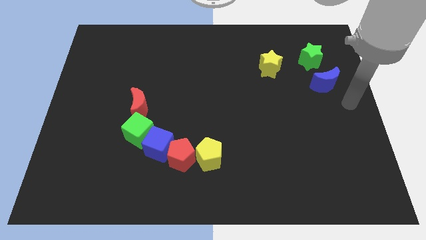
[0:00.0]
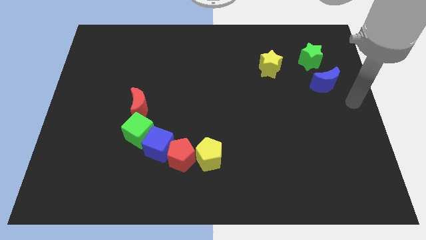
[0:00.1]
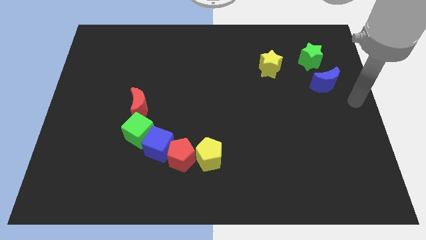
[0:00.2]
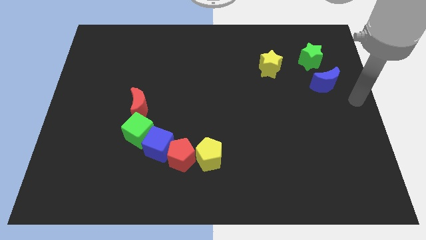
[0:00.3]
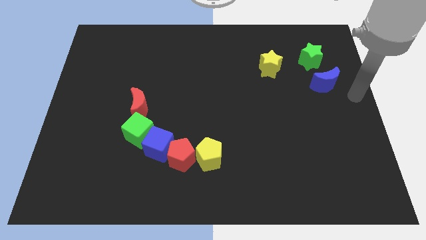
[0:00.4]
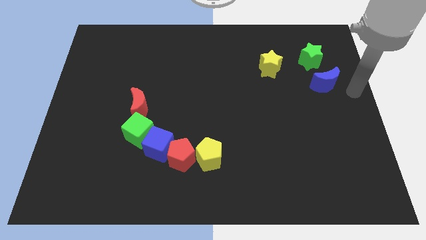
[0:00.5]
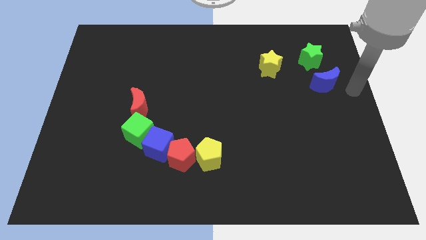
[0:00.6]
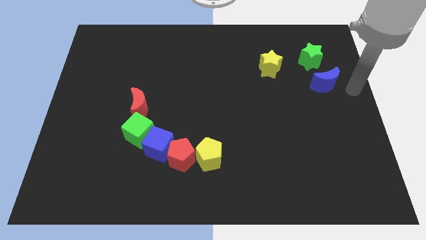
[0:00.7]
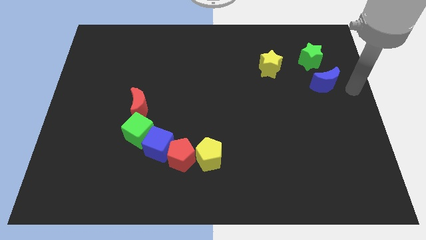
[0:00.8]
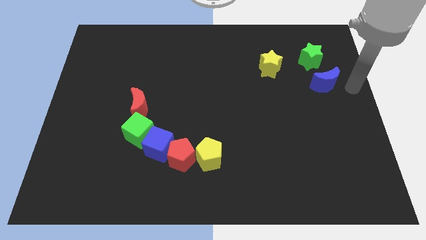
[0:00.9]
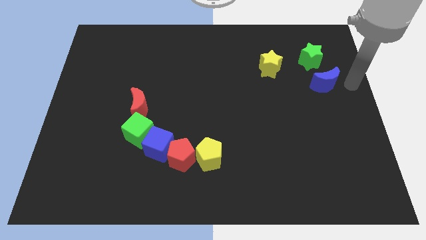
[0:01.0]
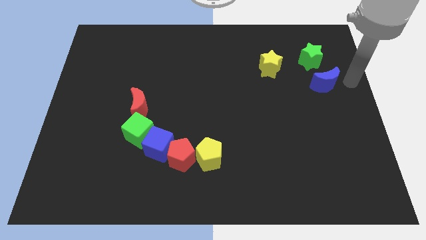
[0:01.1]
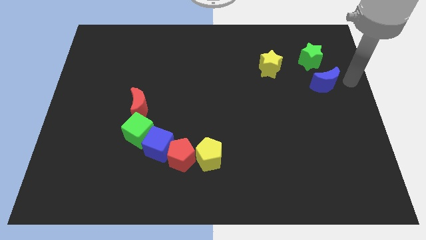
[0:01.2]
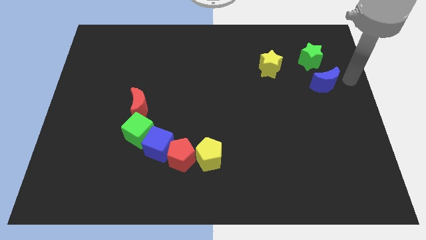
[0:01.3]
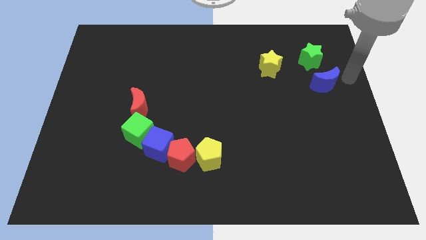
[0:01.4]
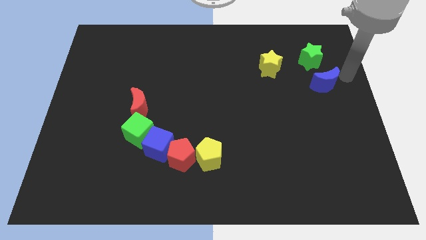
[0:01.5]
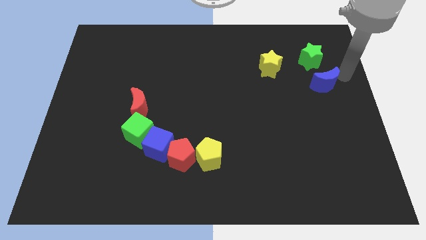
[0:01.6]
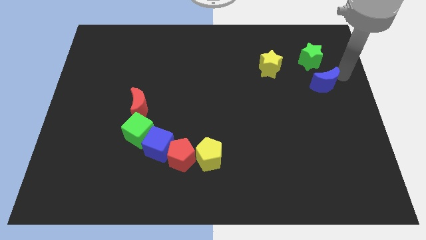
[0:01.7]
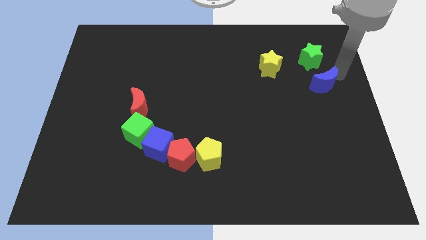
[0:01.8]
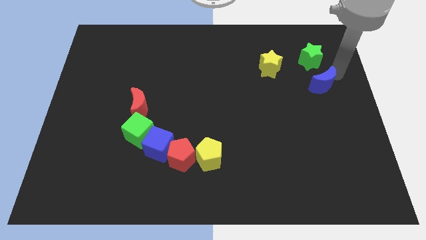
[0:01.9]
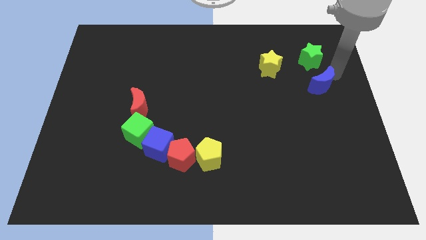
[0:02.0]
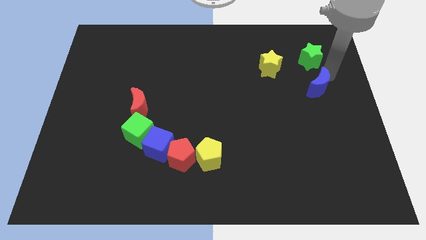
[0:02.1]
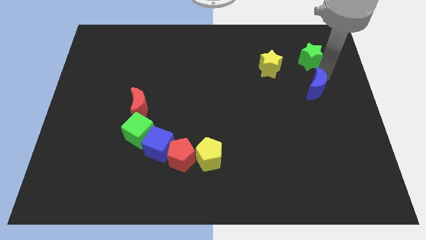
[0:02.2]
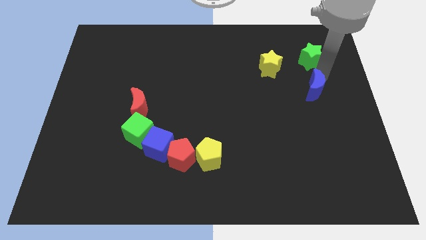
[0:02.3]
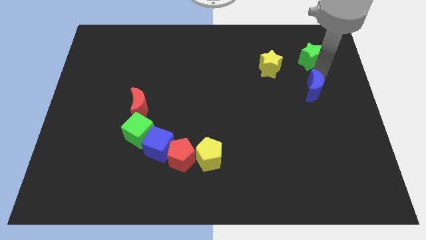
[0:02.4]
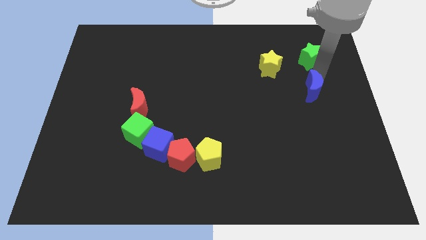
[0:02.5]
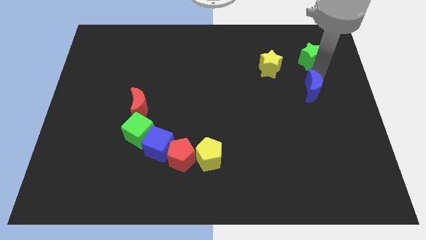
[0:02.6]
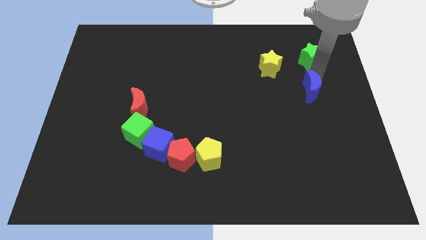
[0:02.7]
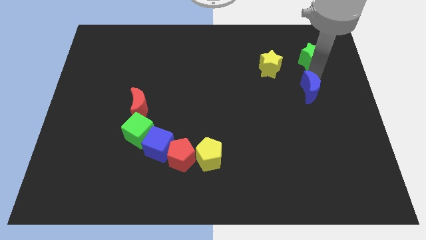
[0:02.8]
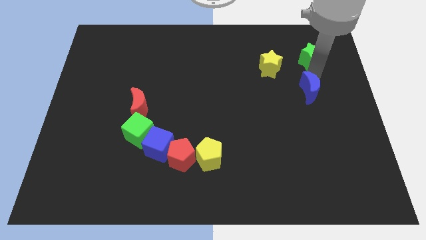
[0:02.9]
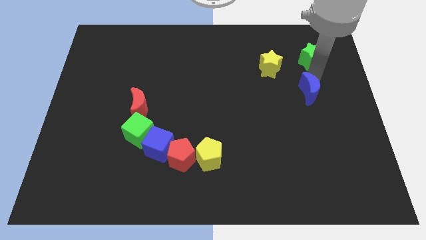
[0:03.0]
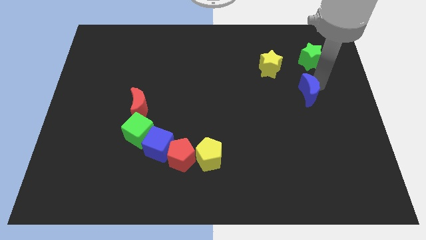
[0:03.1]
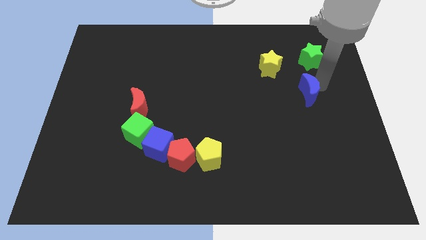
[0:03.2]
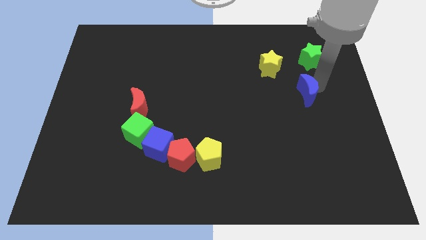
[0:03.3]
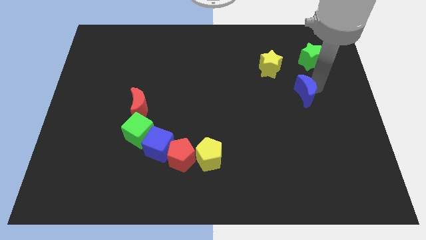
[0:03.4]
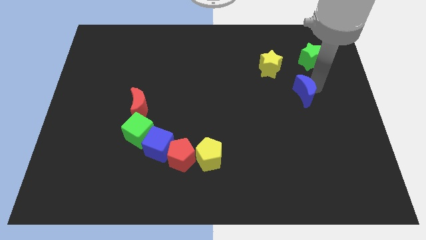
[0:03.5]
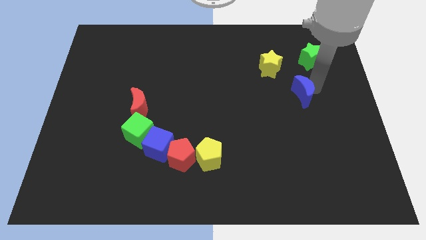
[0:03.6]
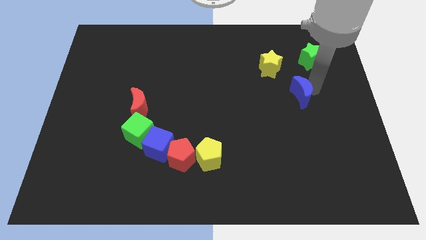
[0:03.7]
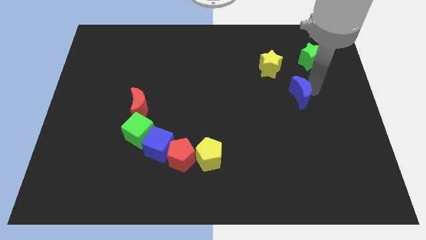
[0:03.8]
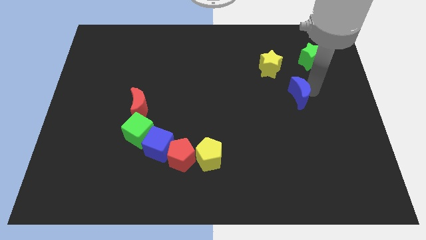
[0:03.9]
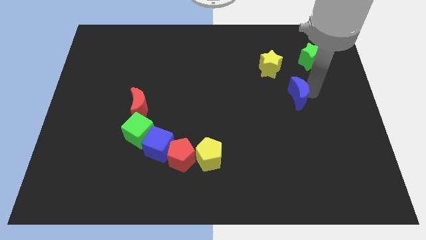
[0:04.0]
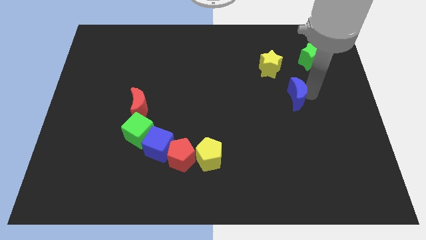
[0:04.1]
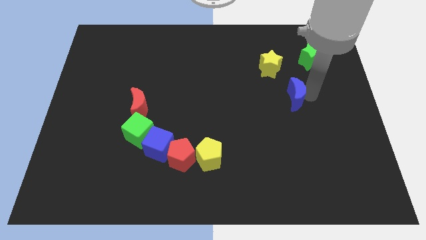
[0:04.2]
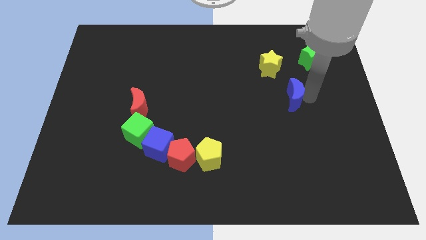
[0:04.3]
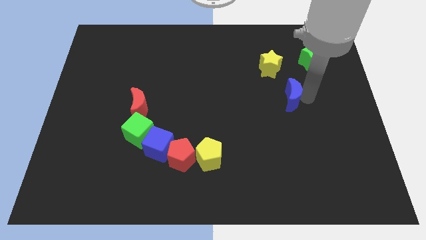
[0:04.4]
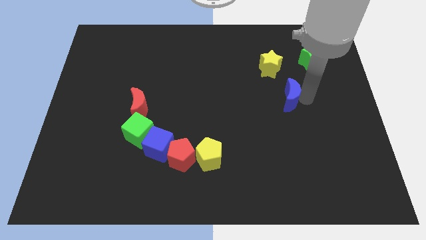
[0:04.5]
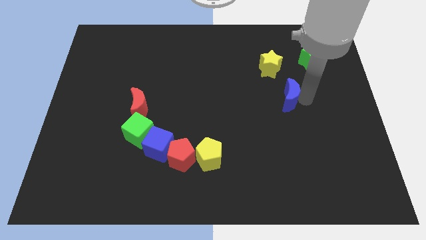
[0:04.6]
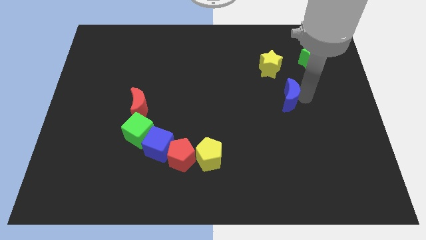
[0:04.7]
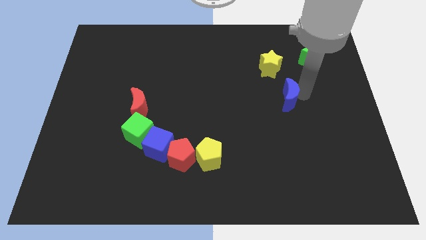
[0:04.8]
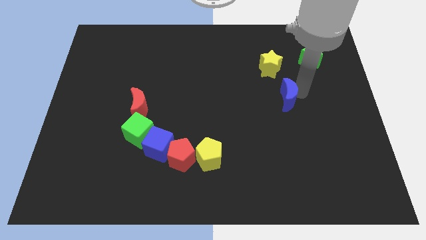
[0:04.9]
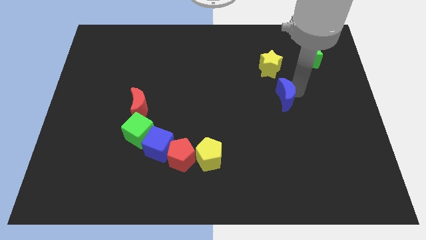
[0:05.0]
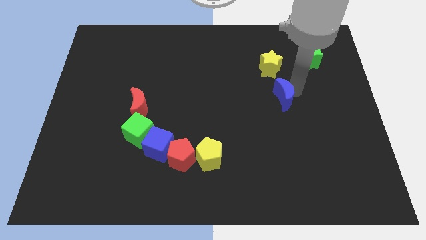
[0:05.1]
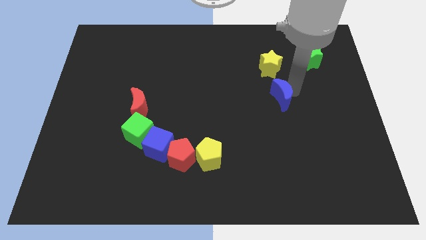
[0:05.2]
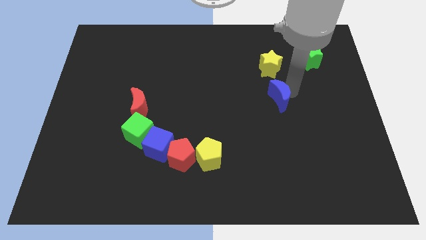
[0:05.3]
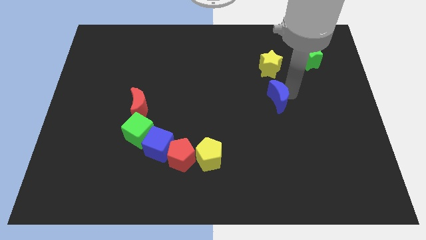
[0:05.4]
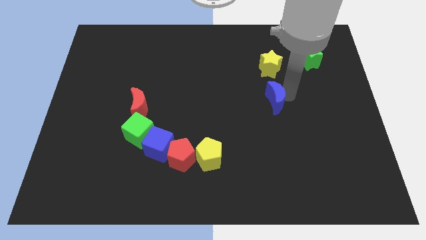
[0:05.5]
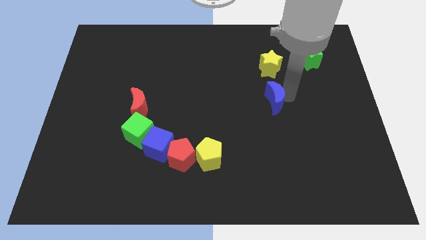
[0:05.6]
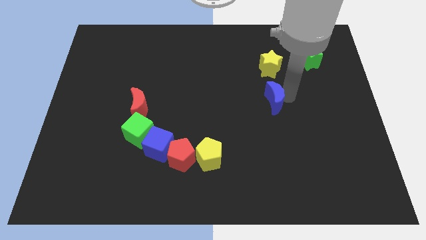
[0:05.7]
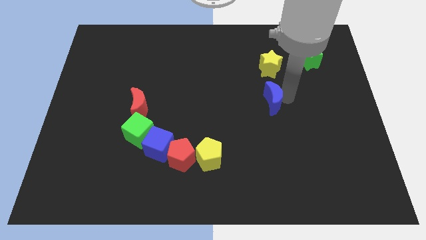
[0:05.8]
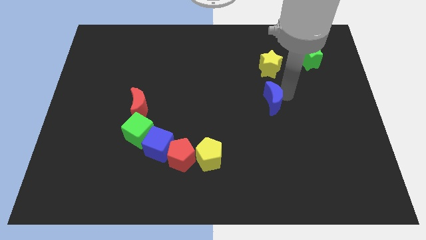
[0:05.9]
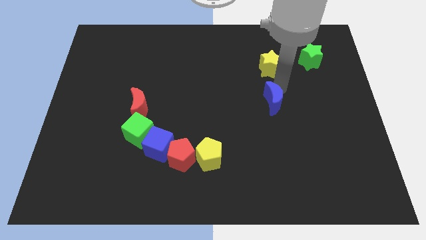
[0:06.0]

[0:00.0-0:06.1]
slide blue moon below yellow star

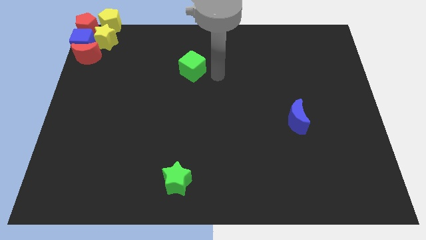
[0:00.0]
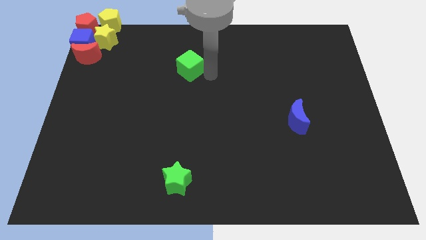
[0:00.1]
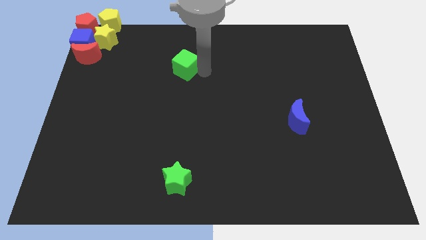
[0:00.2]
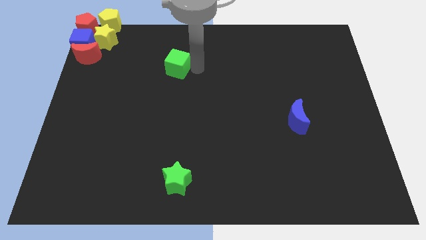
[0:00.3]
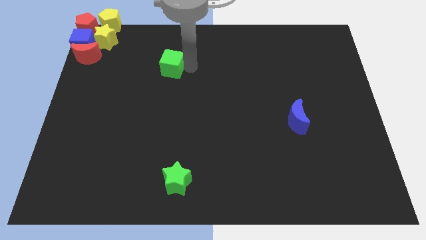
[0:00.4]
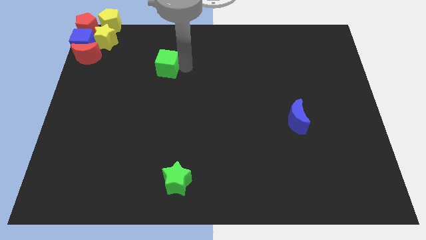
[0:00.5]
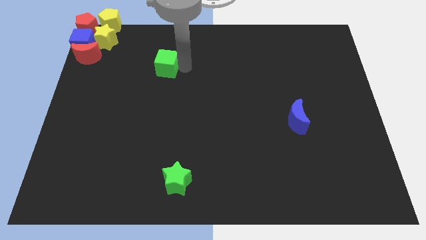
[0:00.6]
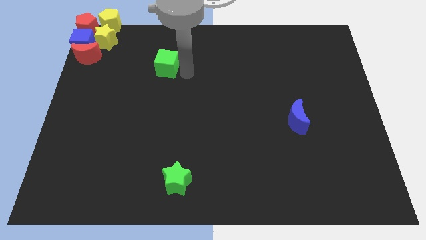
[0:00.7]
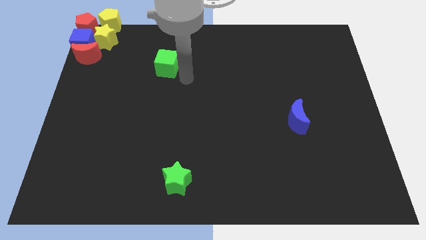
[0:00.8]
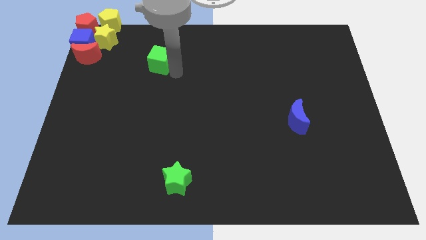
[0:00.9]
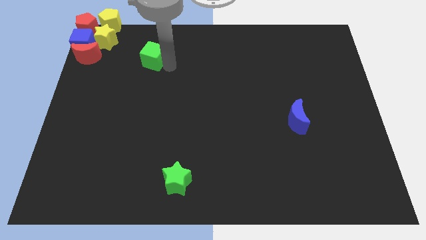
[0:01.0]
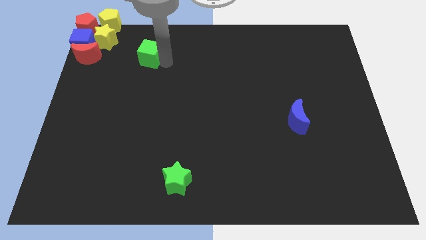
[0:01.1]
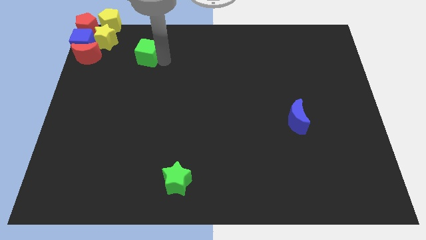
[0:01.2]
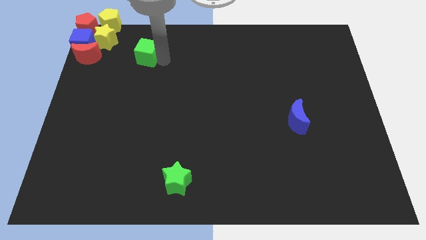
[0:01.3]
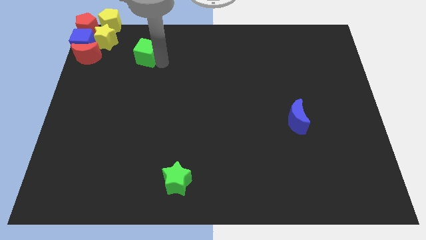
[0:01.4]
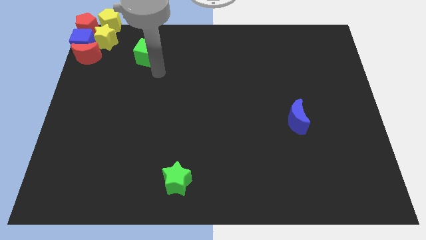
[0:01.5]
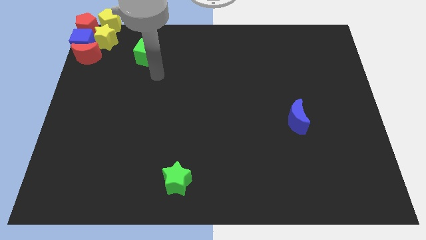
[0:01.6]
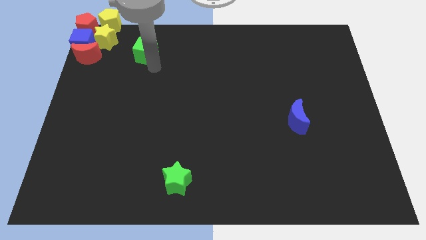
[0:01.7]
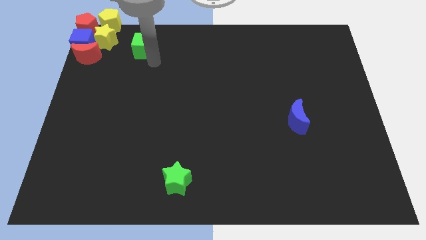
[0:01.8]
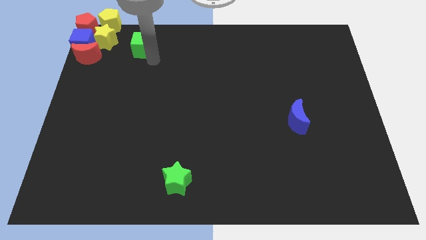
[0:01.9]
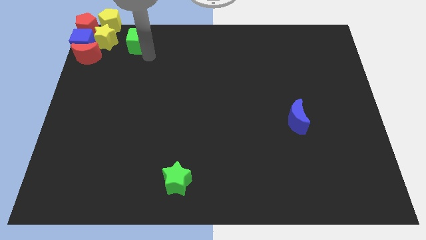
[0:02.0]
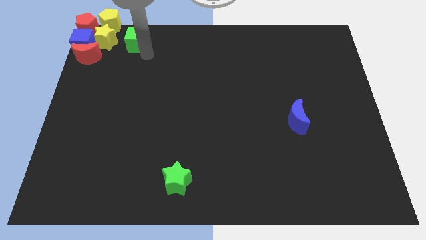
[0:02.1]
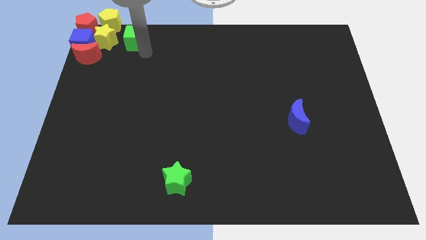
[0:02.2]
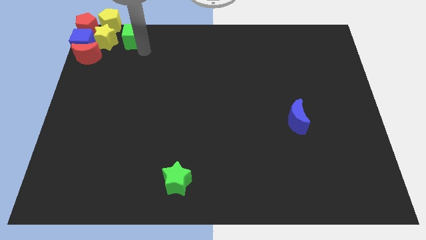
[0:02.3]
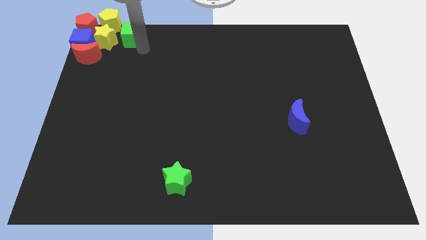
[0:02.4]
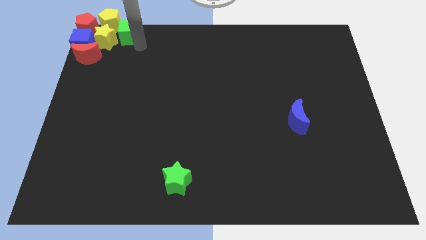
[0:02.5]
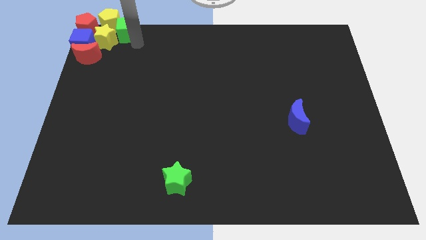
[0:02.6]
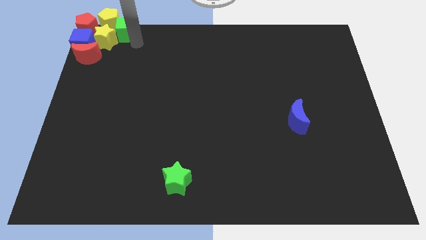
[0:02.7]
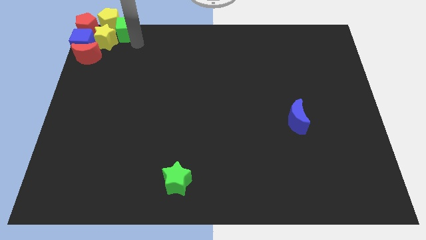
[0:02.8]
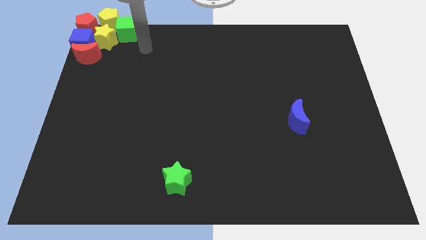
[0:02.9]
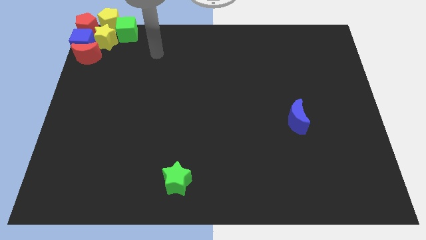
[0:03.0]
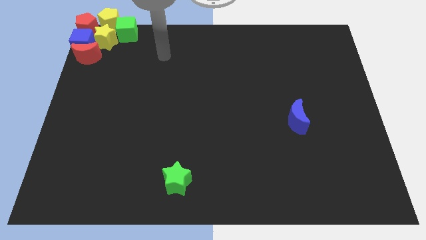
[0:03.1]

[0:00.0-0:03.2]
push the green cube into the yellow pentagon
